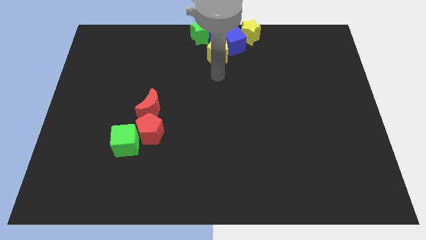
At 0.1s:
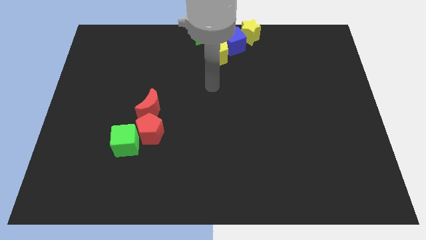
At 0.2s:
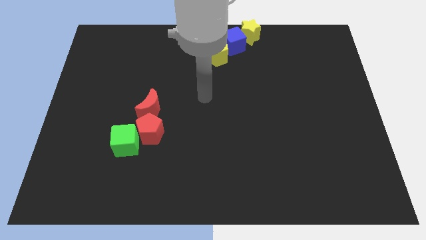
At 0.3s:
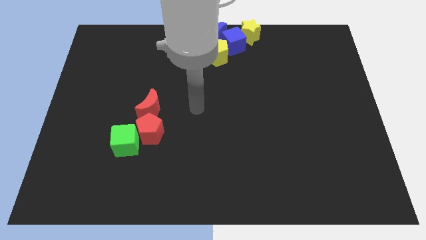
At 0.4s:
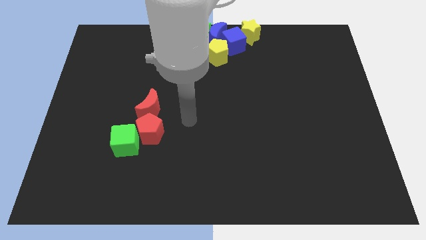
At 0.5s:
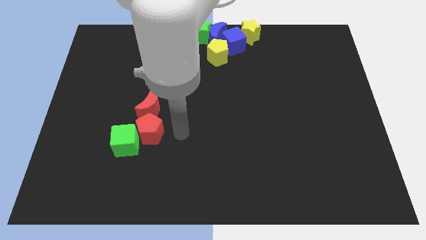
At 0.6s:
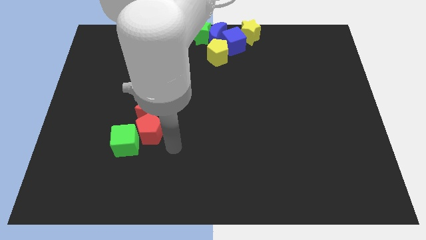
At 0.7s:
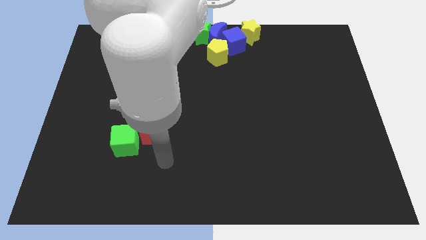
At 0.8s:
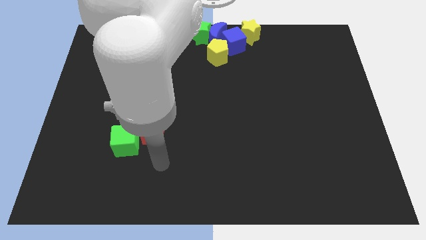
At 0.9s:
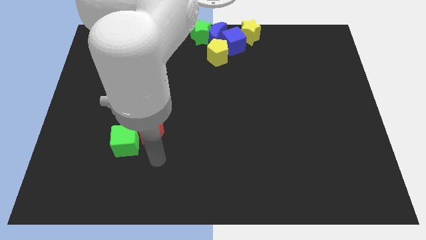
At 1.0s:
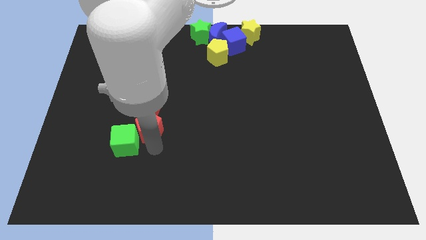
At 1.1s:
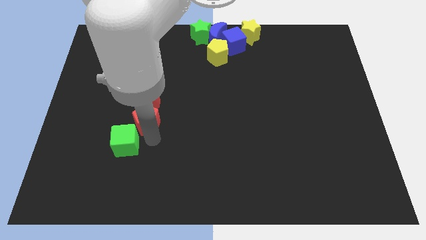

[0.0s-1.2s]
move your arm away from the yellow pentagon

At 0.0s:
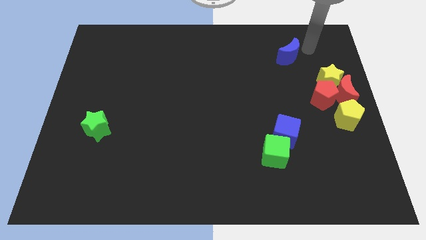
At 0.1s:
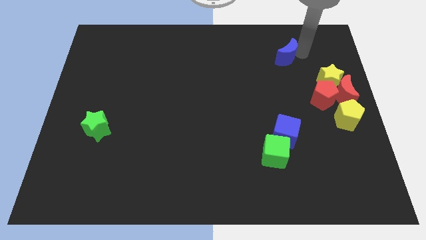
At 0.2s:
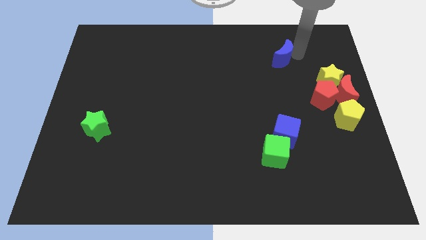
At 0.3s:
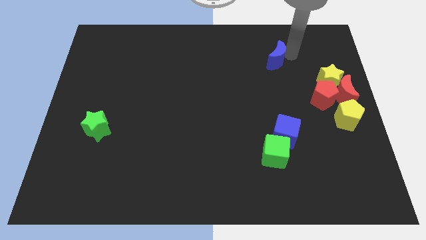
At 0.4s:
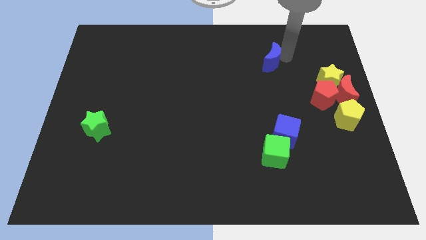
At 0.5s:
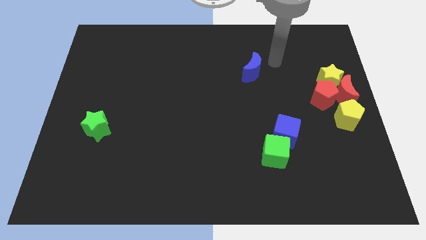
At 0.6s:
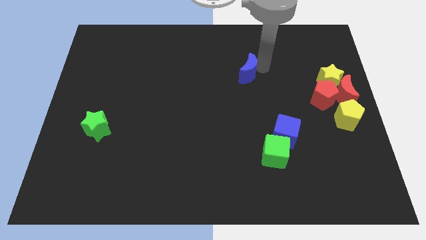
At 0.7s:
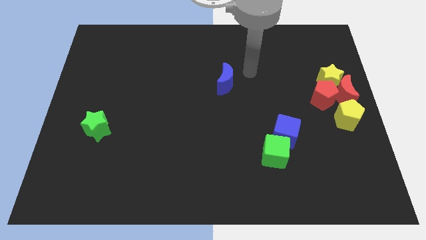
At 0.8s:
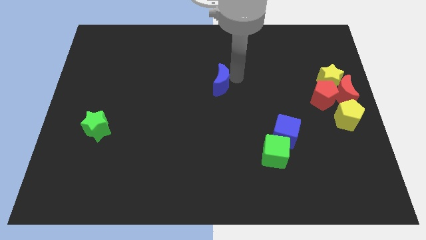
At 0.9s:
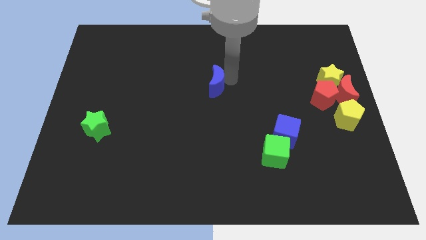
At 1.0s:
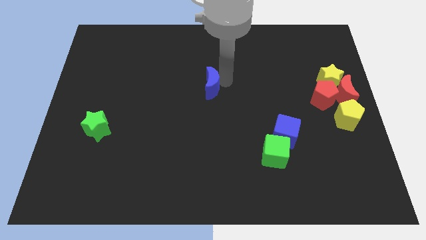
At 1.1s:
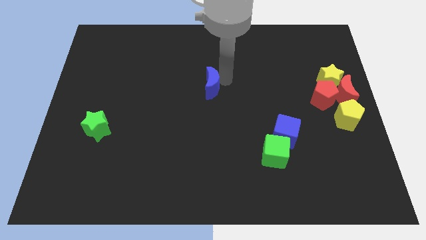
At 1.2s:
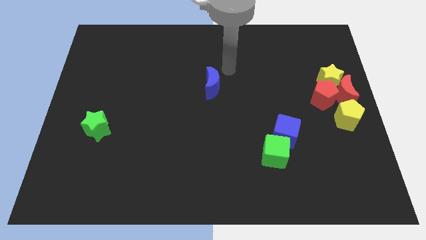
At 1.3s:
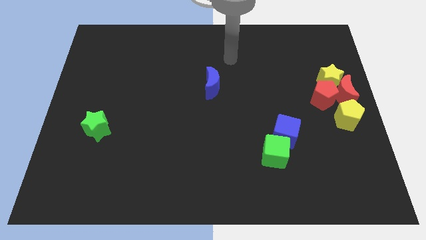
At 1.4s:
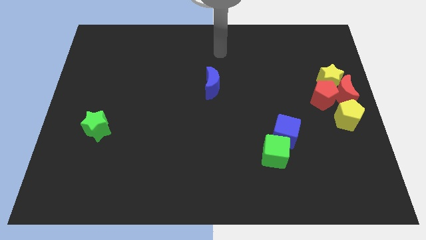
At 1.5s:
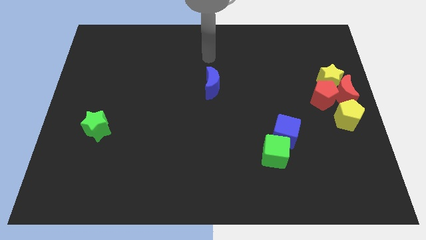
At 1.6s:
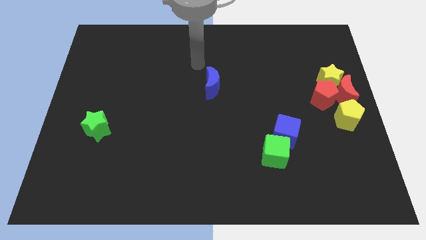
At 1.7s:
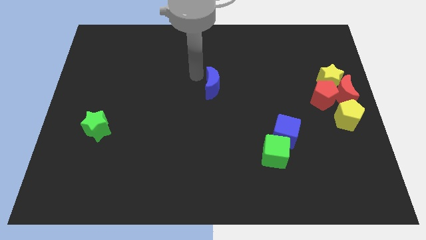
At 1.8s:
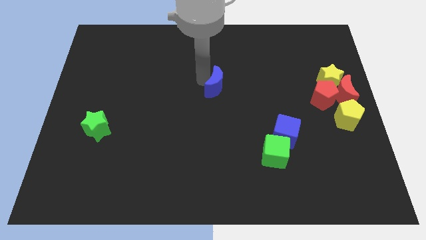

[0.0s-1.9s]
place the blue moon at the center of the board

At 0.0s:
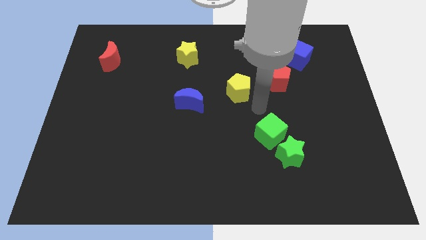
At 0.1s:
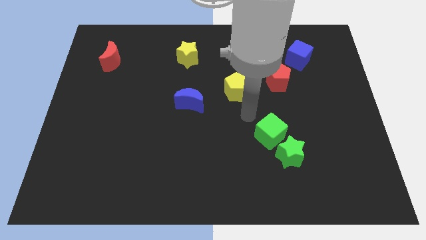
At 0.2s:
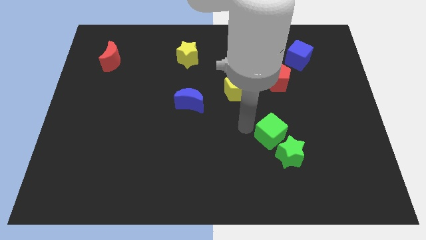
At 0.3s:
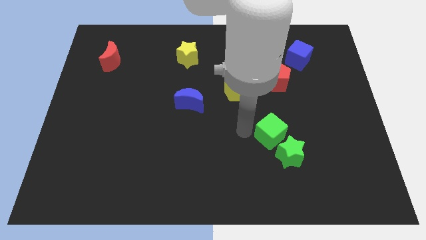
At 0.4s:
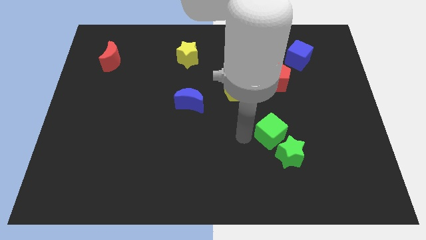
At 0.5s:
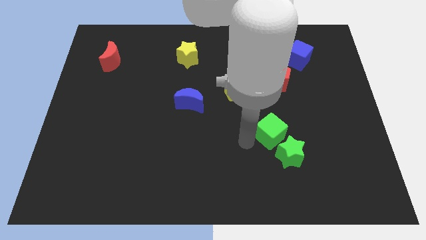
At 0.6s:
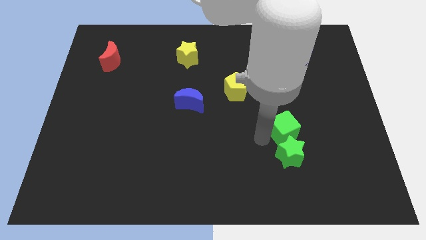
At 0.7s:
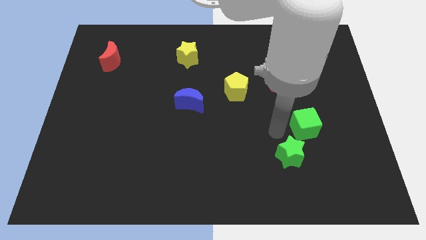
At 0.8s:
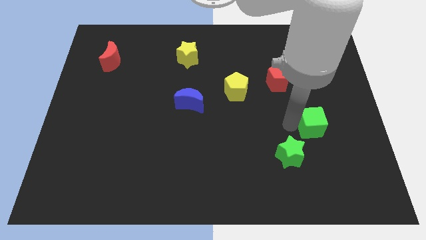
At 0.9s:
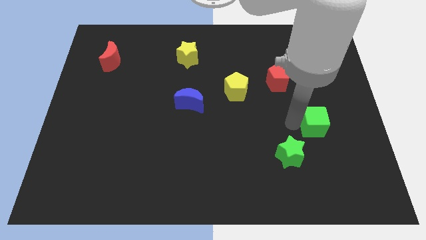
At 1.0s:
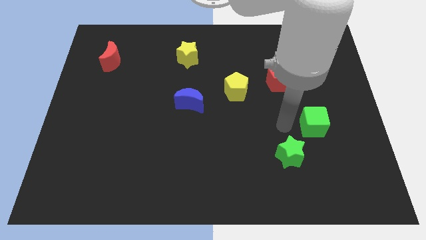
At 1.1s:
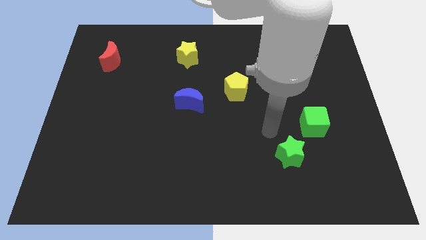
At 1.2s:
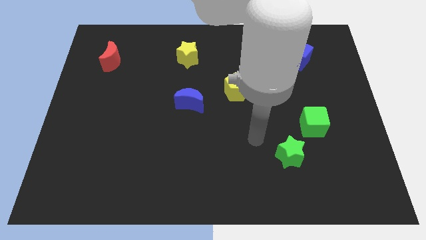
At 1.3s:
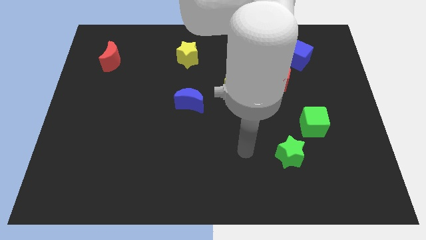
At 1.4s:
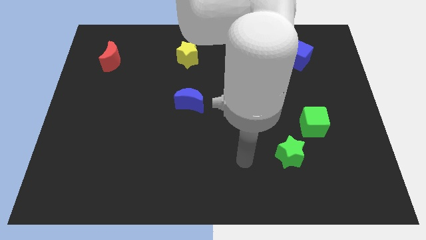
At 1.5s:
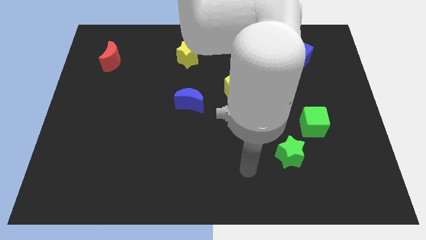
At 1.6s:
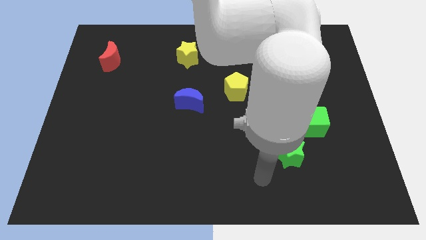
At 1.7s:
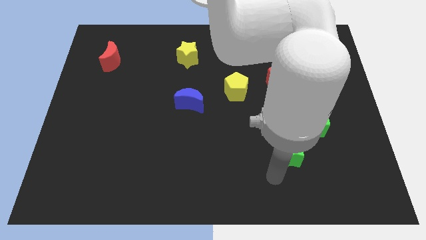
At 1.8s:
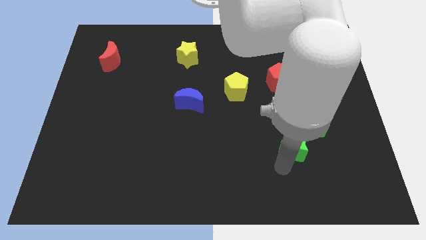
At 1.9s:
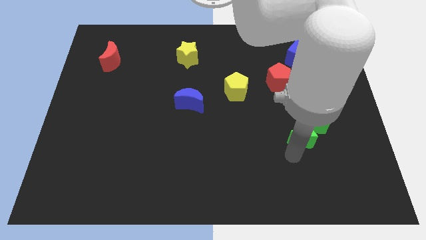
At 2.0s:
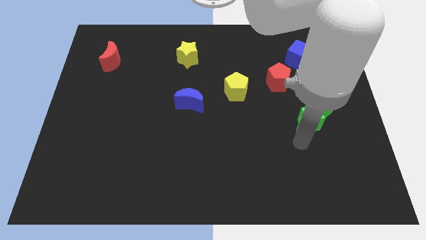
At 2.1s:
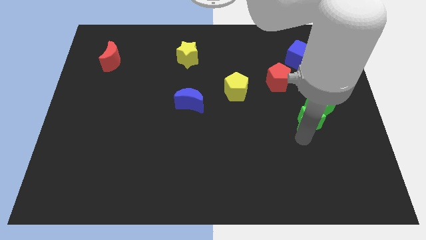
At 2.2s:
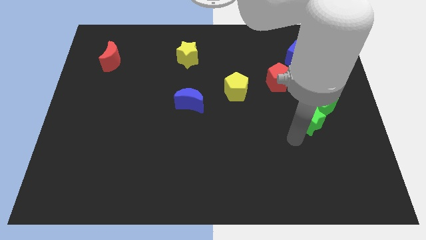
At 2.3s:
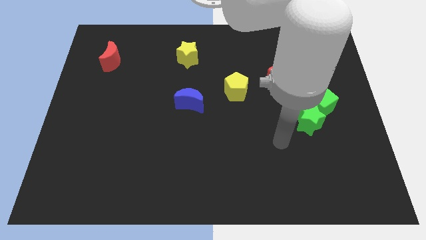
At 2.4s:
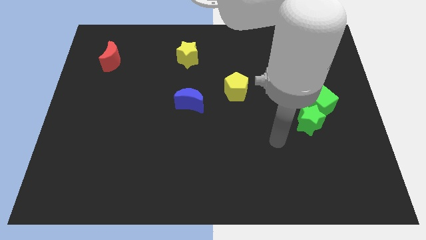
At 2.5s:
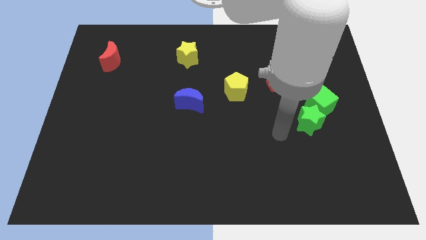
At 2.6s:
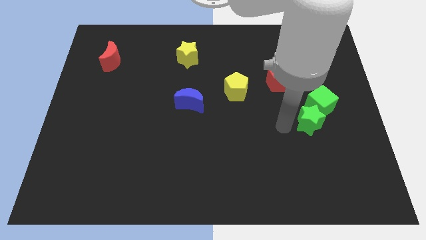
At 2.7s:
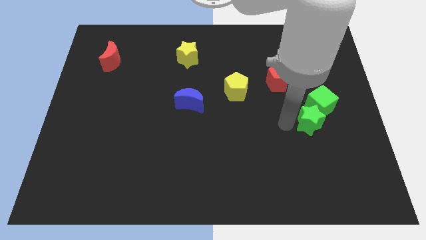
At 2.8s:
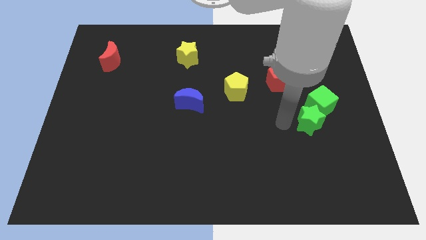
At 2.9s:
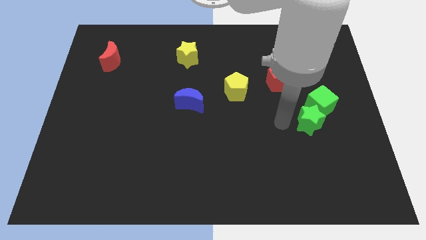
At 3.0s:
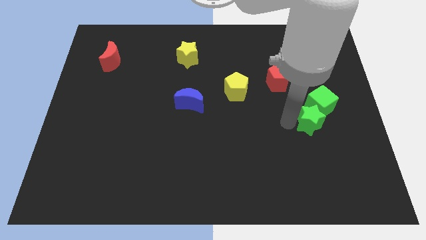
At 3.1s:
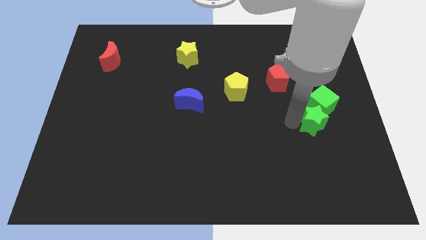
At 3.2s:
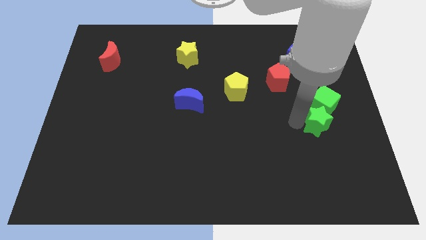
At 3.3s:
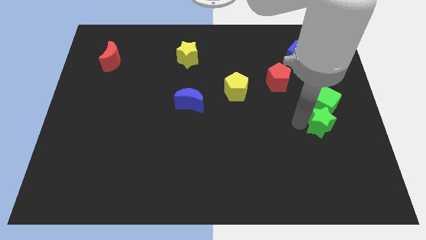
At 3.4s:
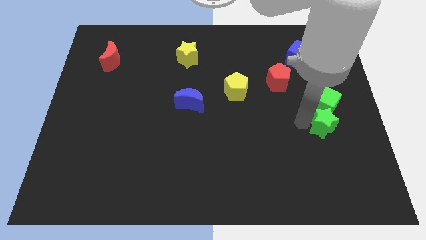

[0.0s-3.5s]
move the green cube and green star near to the right center

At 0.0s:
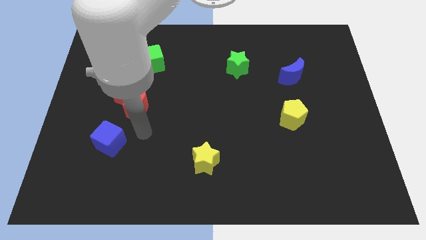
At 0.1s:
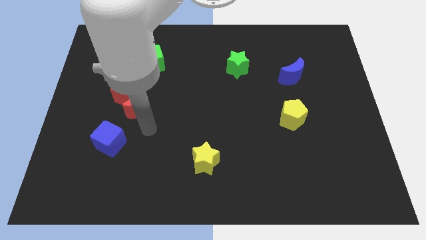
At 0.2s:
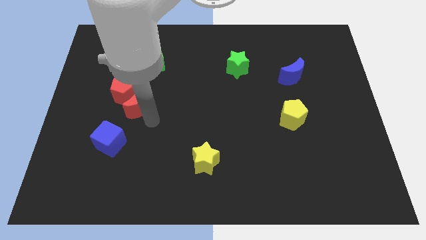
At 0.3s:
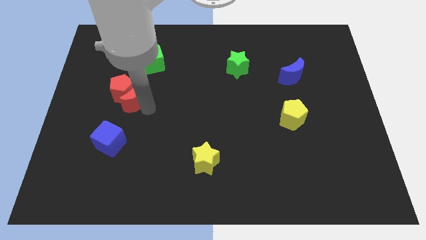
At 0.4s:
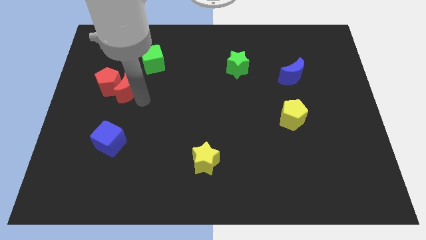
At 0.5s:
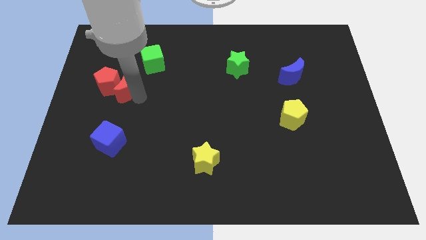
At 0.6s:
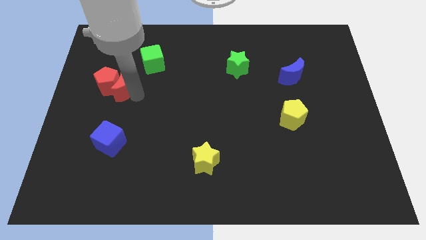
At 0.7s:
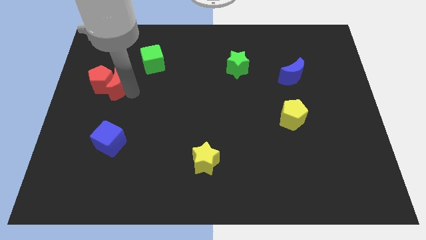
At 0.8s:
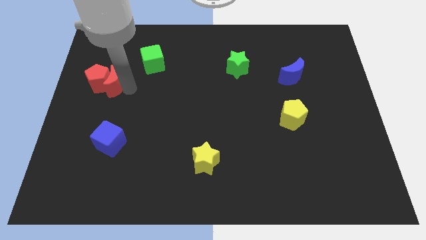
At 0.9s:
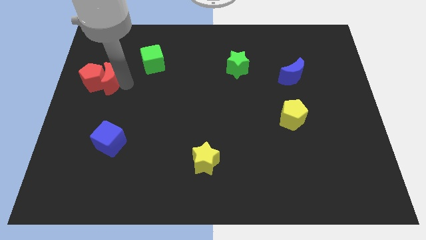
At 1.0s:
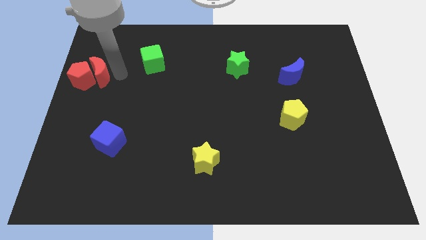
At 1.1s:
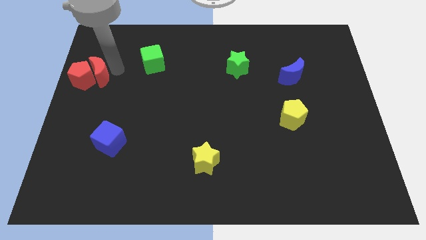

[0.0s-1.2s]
move the red pentagon and red moon to the center left of the board

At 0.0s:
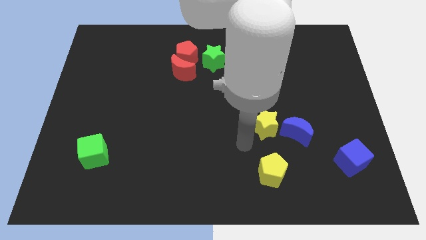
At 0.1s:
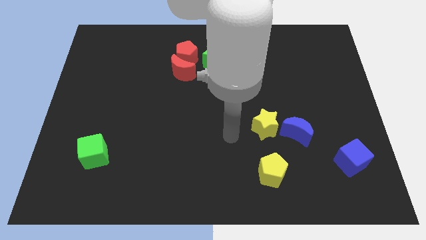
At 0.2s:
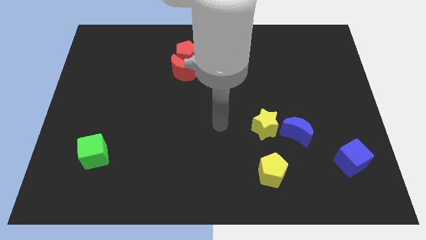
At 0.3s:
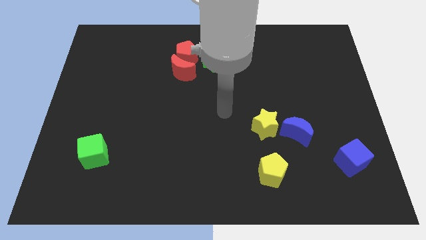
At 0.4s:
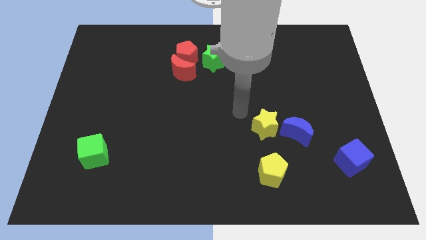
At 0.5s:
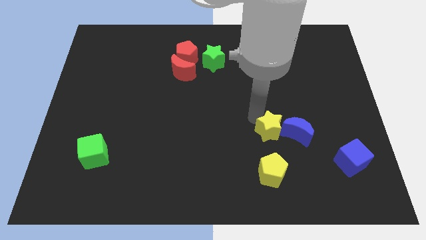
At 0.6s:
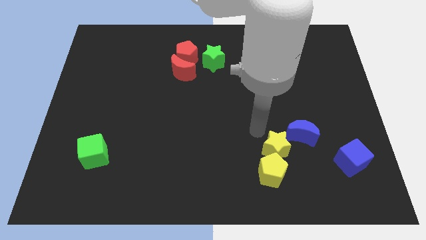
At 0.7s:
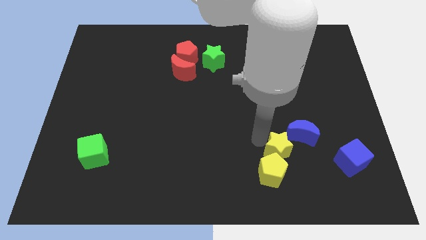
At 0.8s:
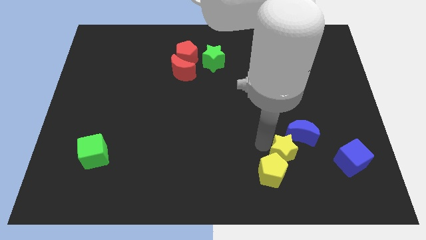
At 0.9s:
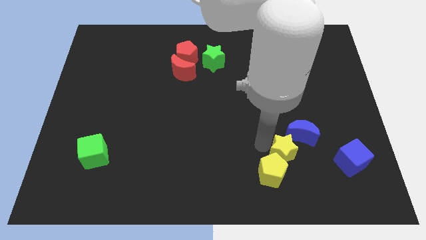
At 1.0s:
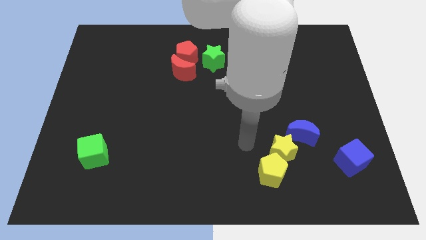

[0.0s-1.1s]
move the yellow star diagonally top right to the yellow pentagon
